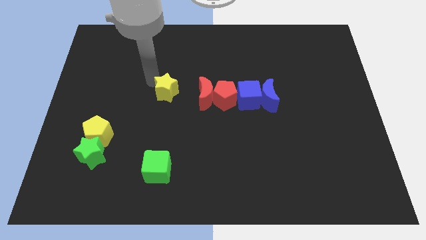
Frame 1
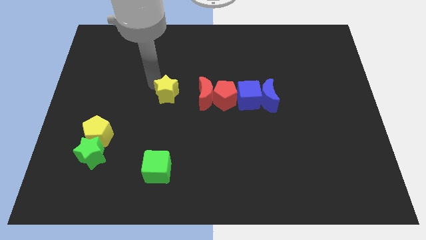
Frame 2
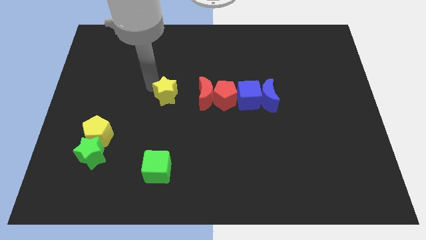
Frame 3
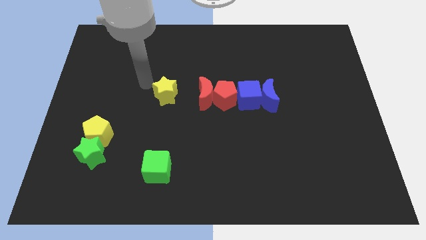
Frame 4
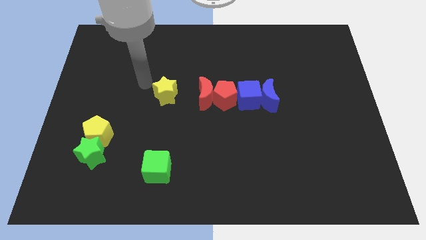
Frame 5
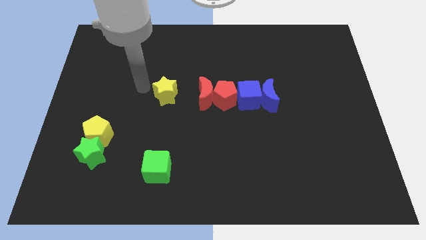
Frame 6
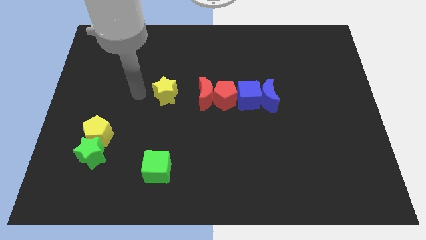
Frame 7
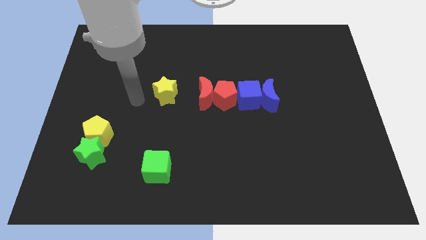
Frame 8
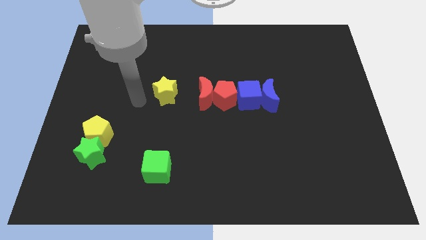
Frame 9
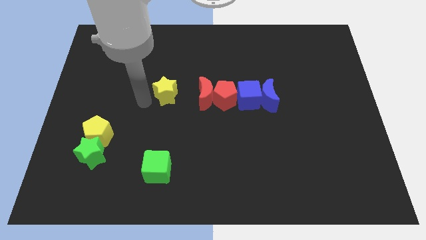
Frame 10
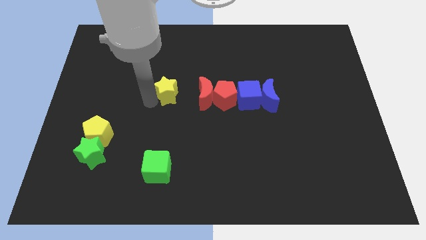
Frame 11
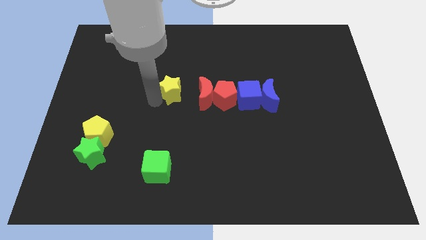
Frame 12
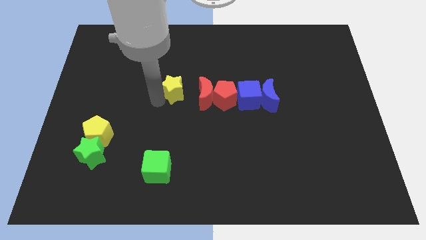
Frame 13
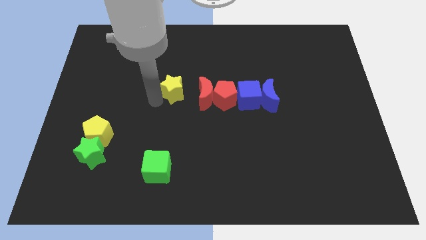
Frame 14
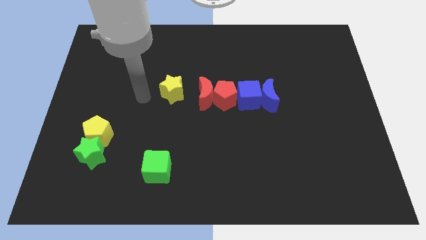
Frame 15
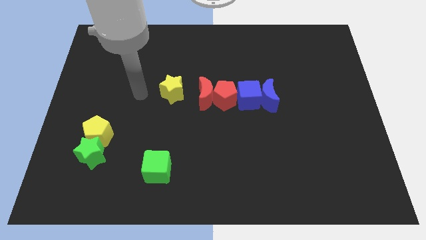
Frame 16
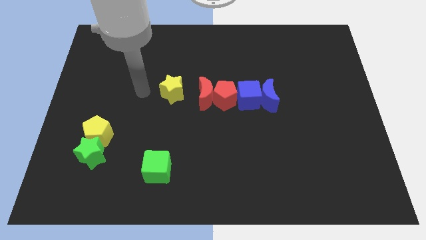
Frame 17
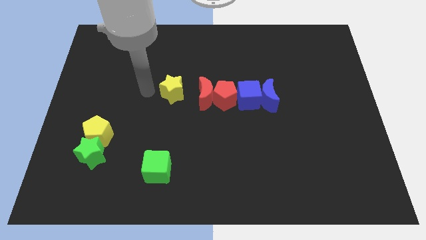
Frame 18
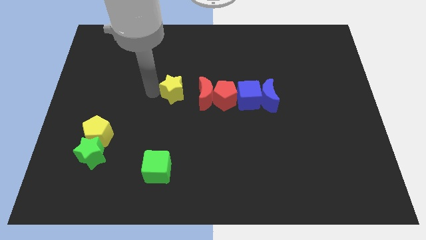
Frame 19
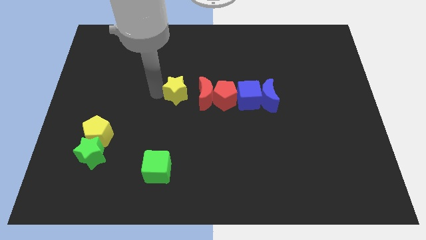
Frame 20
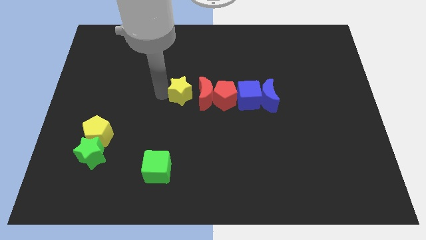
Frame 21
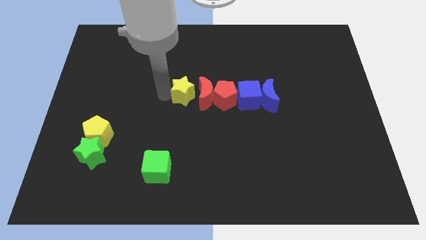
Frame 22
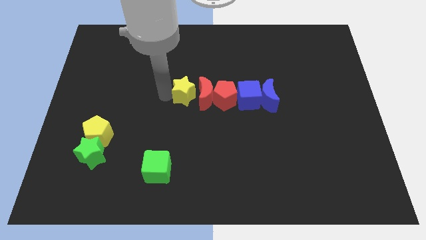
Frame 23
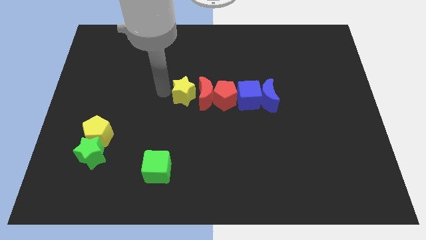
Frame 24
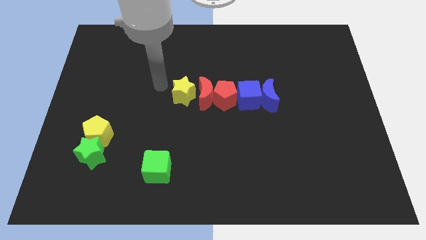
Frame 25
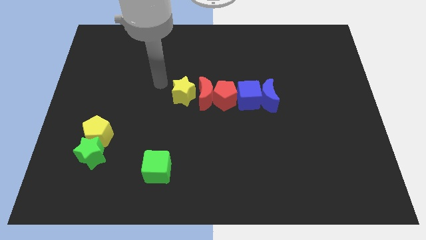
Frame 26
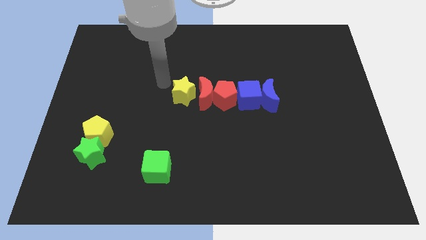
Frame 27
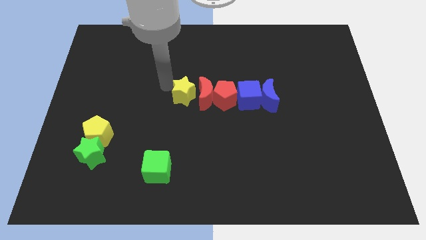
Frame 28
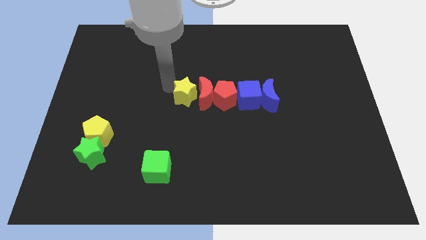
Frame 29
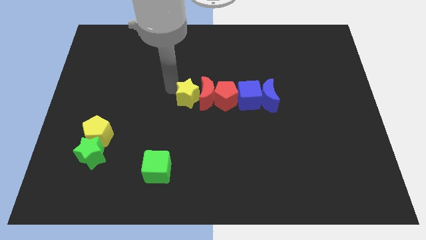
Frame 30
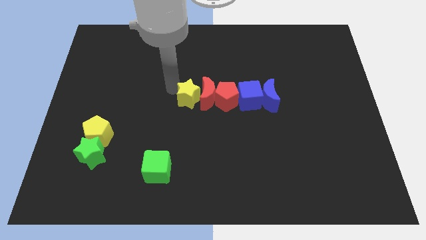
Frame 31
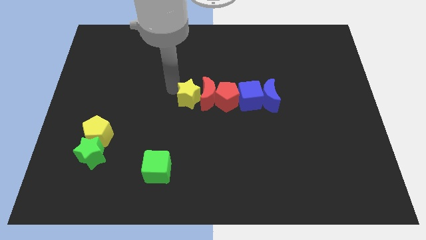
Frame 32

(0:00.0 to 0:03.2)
push the yellow star left to the red crescent

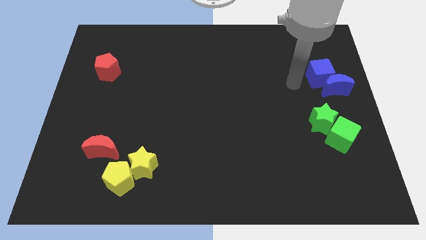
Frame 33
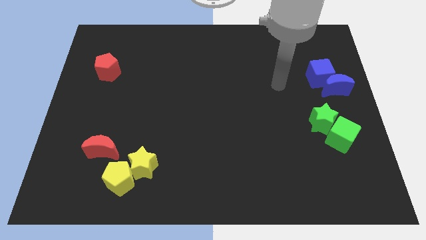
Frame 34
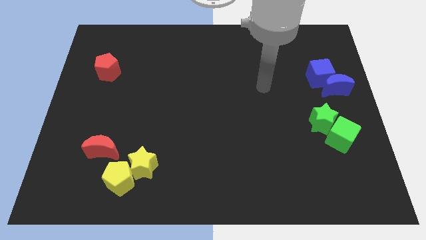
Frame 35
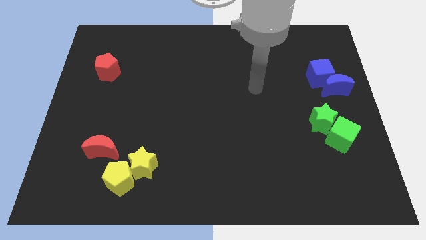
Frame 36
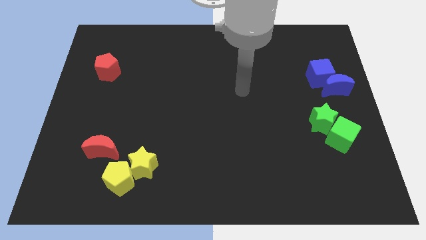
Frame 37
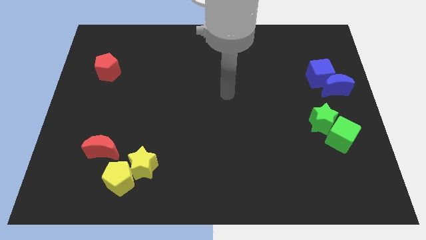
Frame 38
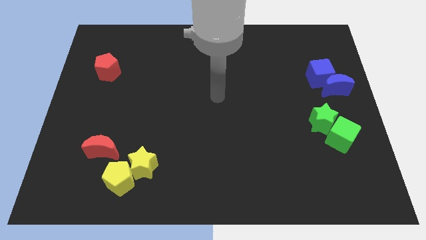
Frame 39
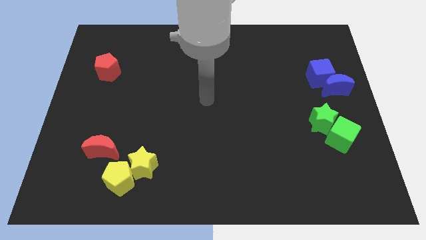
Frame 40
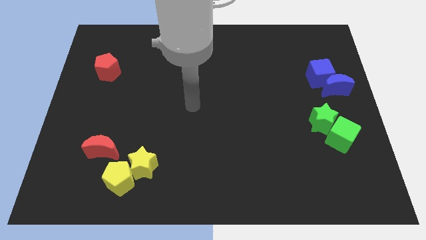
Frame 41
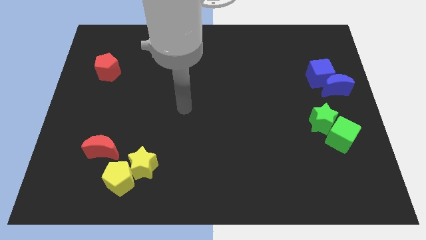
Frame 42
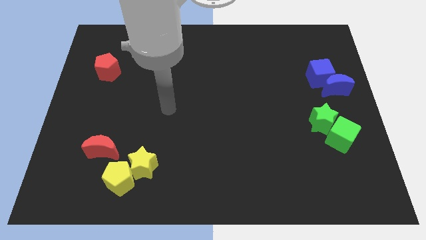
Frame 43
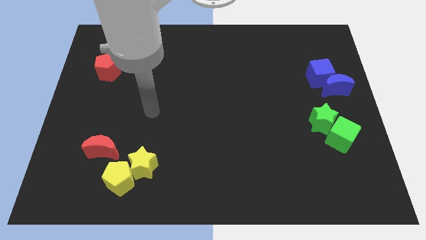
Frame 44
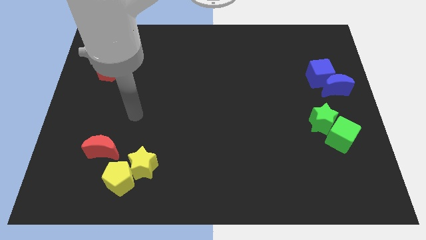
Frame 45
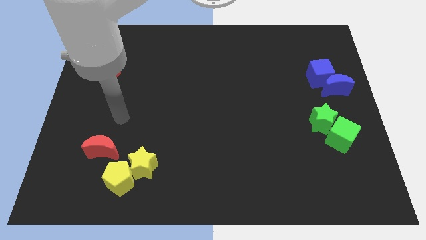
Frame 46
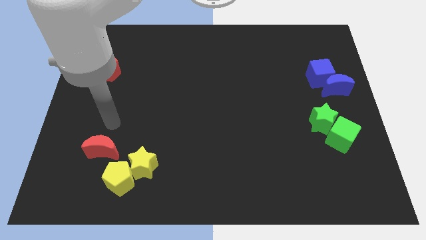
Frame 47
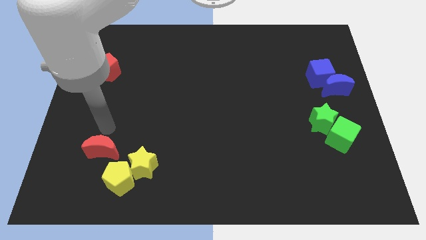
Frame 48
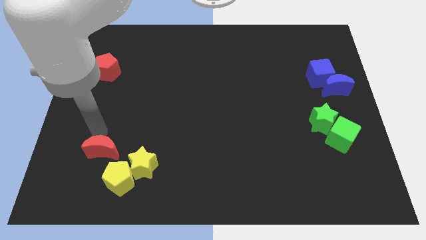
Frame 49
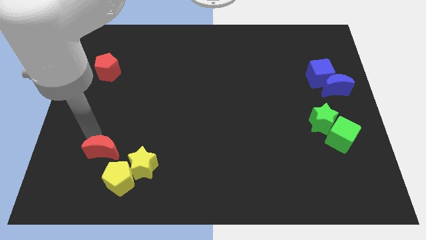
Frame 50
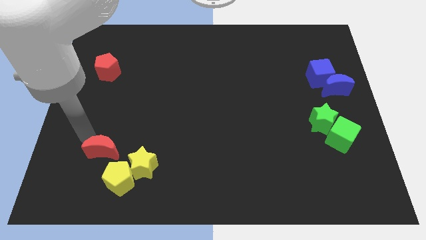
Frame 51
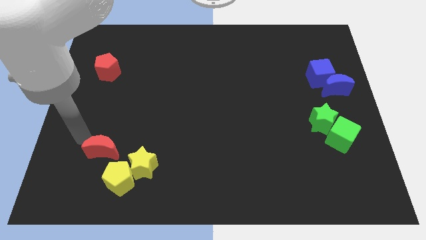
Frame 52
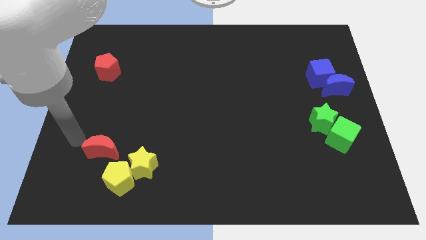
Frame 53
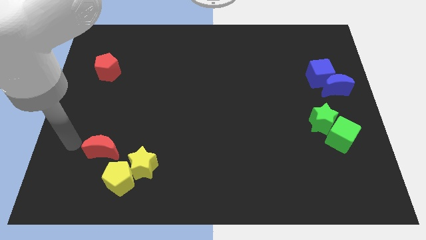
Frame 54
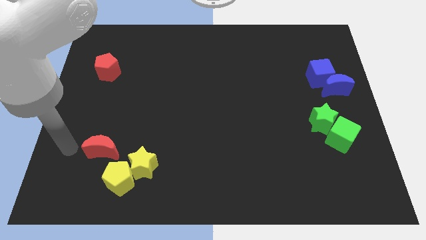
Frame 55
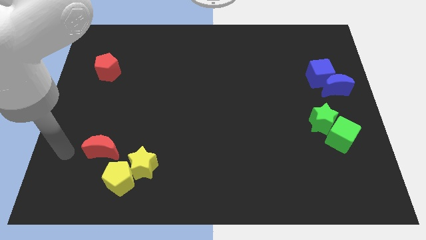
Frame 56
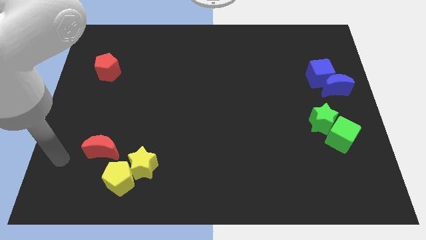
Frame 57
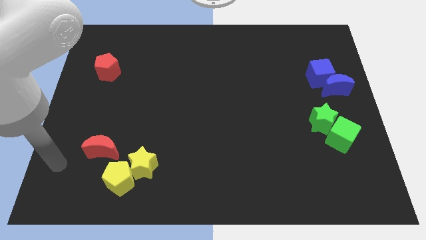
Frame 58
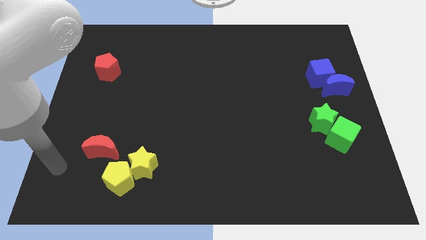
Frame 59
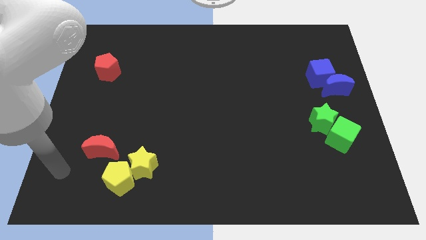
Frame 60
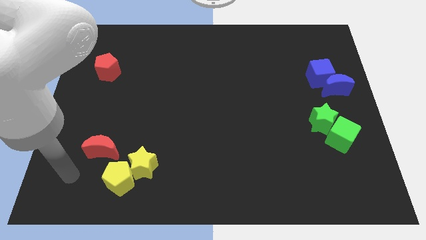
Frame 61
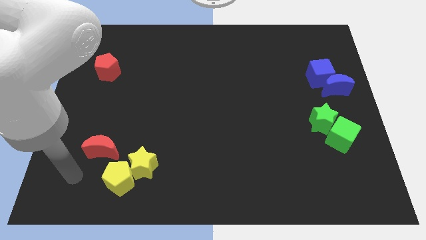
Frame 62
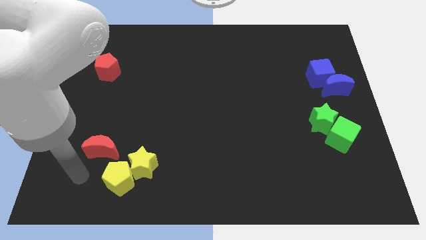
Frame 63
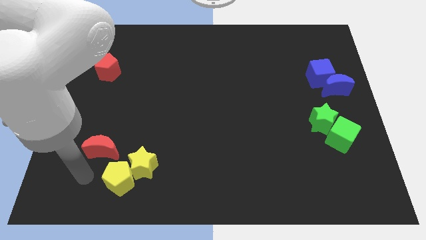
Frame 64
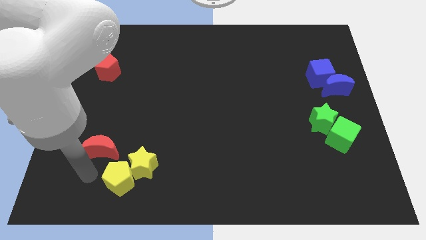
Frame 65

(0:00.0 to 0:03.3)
point your arm at the left of the yellow pentagon

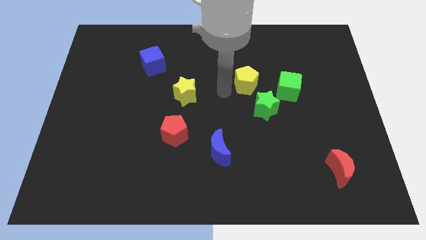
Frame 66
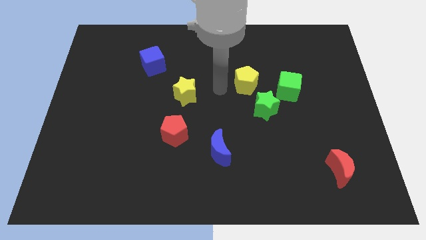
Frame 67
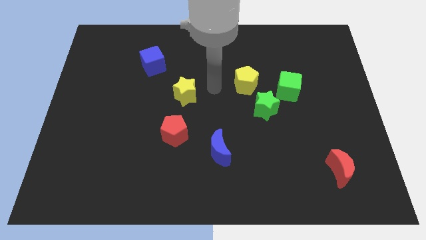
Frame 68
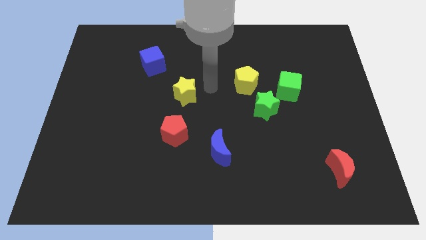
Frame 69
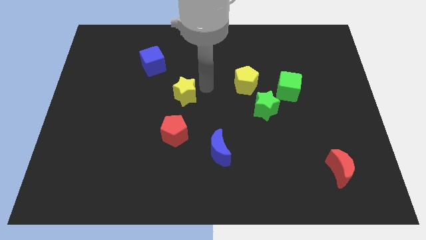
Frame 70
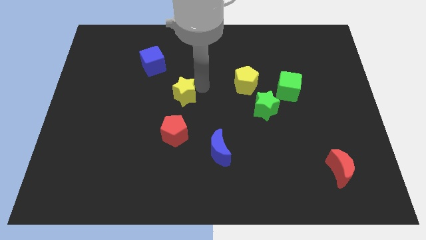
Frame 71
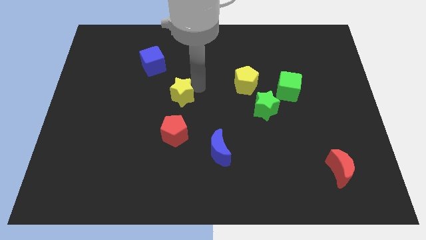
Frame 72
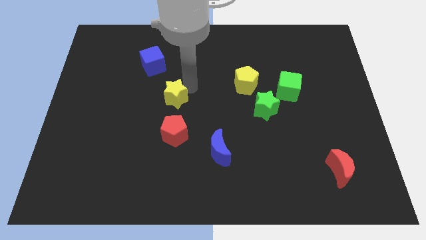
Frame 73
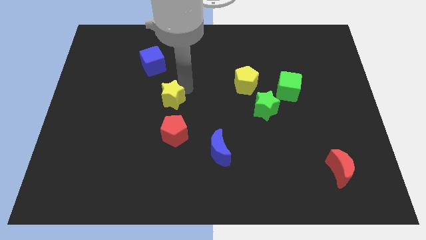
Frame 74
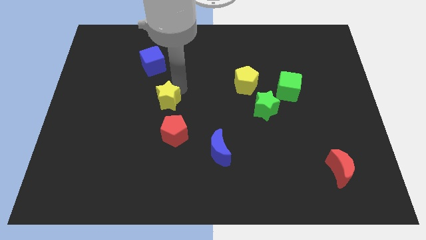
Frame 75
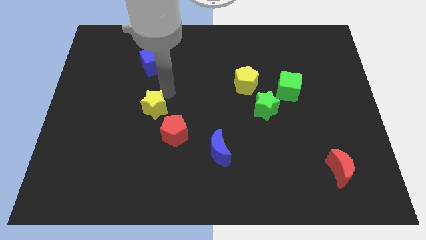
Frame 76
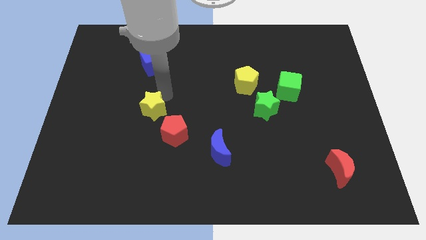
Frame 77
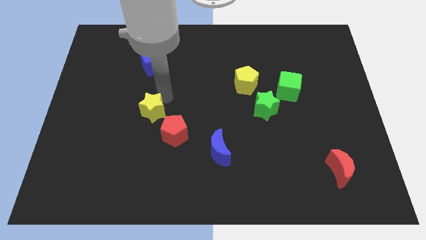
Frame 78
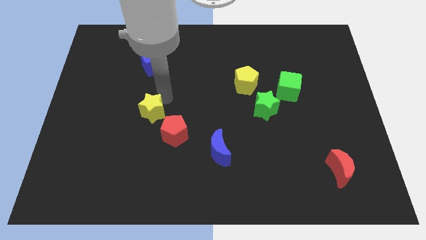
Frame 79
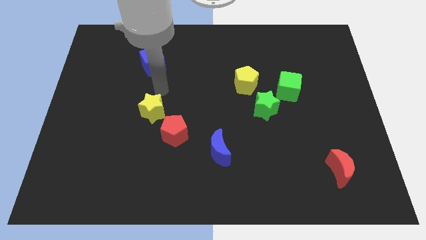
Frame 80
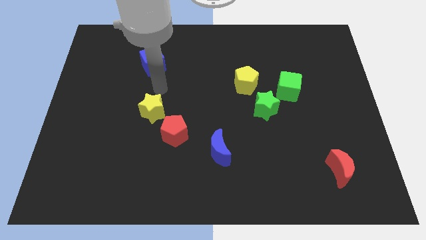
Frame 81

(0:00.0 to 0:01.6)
place the yellow star diagonally top left to the red pentagon

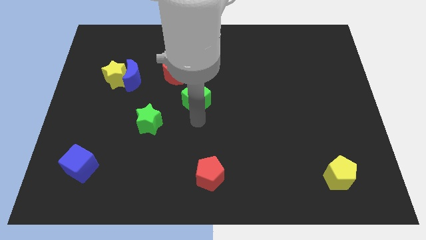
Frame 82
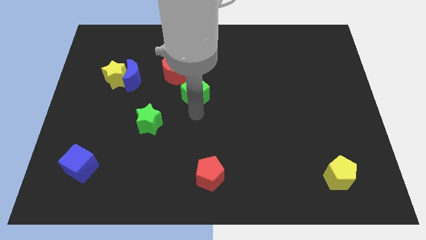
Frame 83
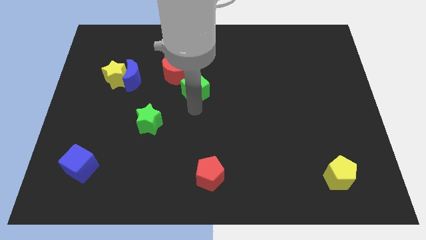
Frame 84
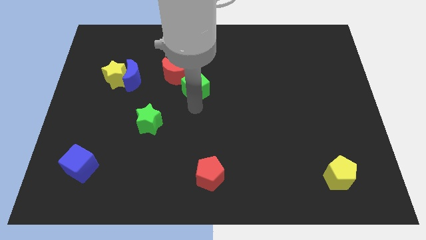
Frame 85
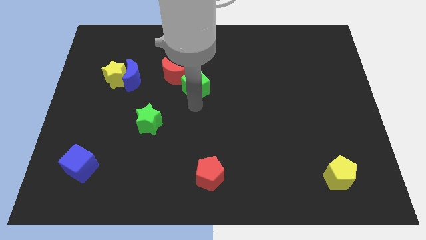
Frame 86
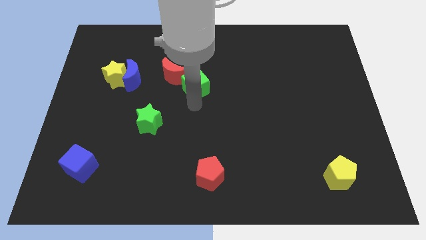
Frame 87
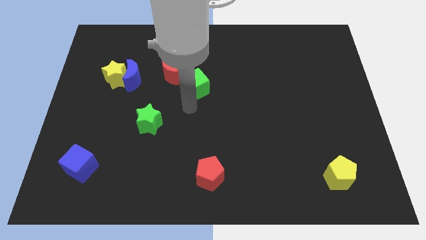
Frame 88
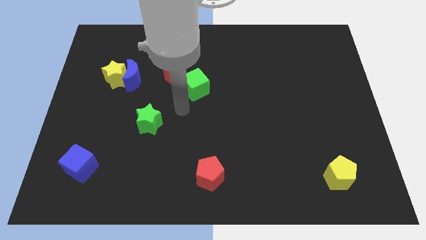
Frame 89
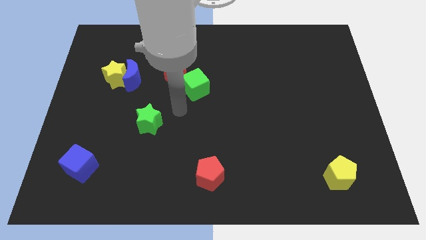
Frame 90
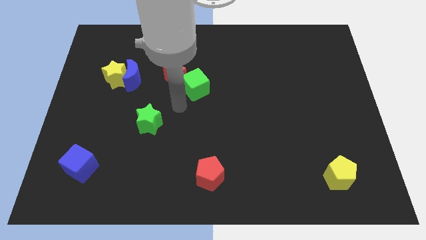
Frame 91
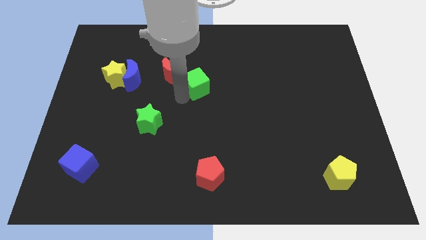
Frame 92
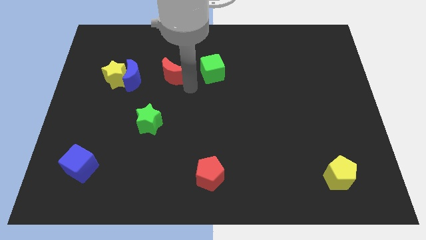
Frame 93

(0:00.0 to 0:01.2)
place the green cube at the bottom right side of red moon
